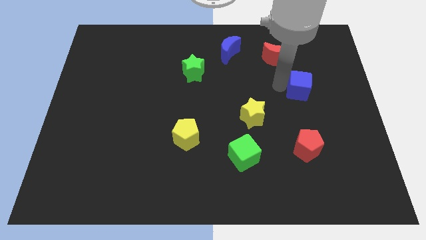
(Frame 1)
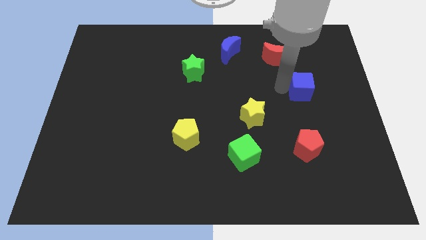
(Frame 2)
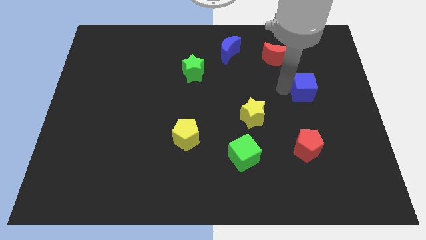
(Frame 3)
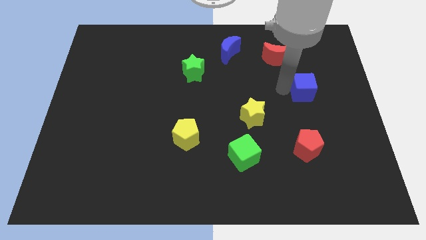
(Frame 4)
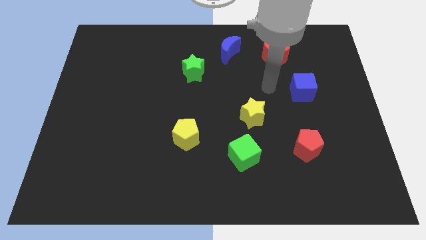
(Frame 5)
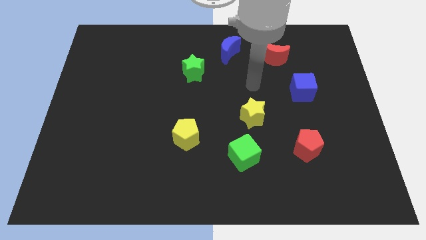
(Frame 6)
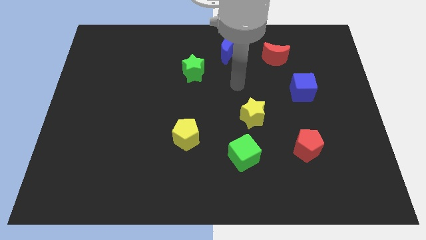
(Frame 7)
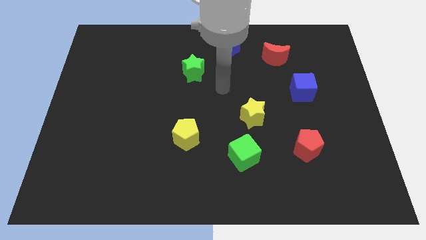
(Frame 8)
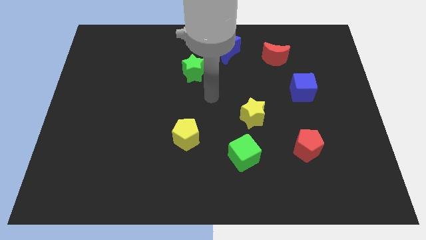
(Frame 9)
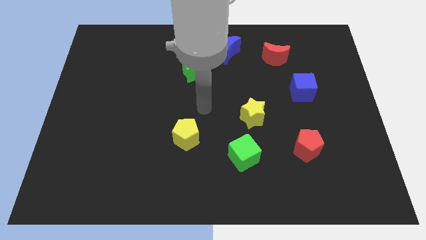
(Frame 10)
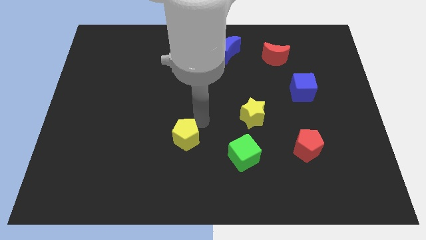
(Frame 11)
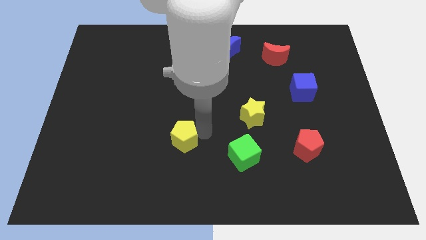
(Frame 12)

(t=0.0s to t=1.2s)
place your arm to the right of yellow pentagon

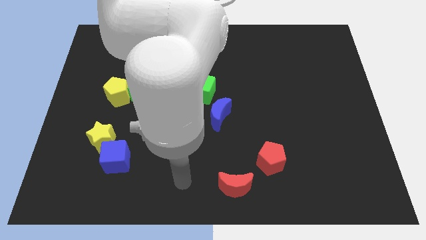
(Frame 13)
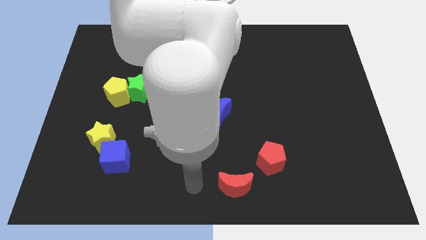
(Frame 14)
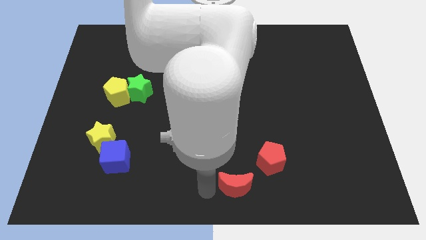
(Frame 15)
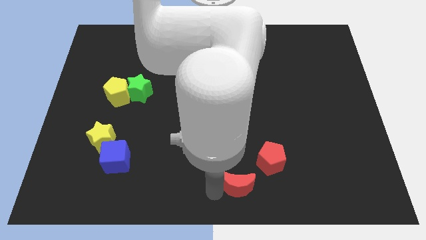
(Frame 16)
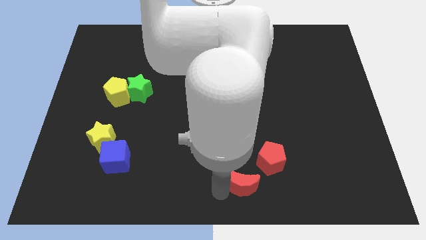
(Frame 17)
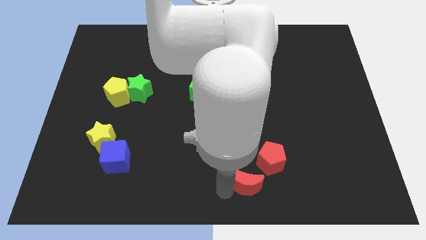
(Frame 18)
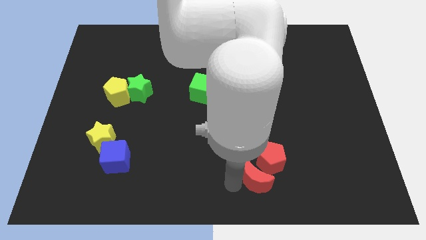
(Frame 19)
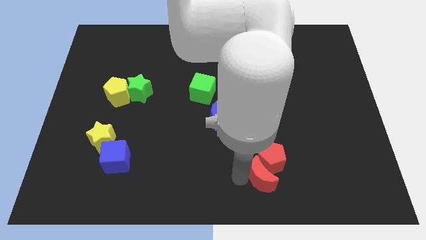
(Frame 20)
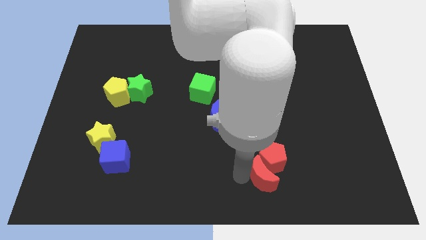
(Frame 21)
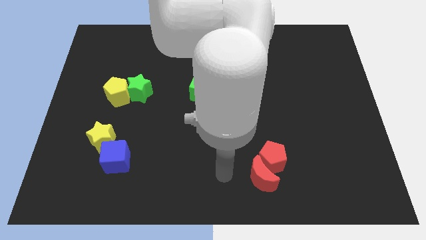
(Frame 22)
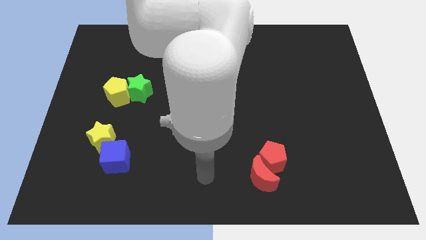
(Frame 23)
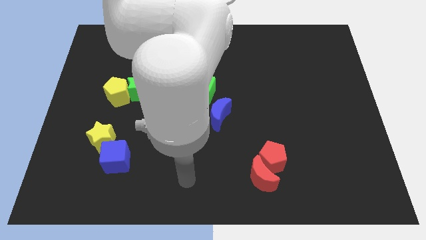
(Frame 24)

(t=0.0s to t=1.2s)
place the red crescent below the red pentagon

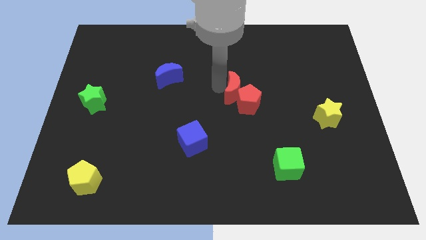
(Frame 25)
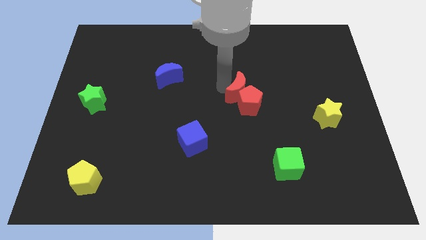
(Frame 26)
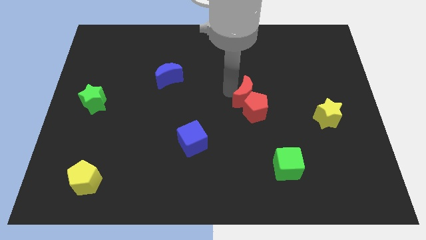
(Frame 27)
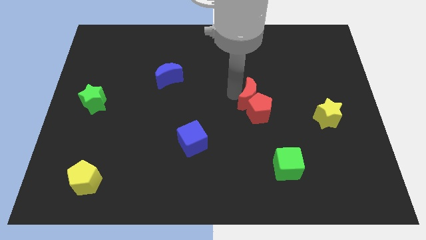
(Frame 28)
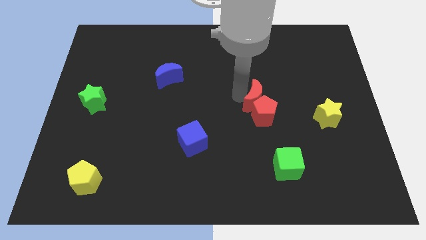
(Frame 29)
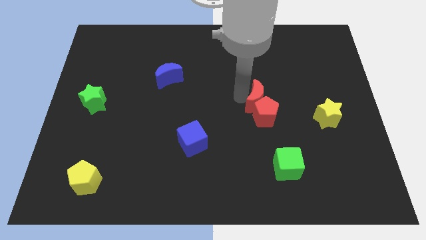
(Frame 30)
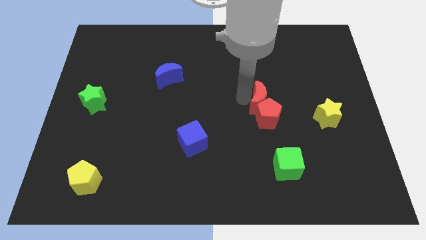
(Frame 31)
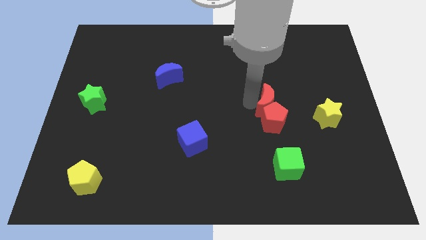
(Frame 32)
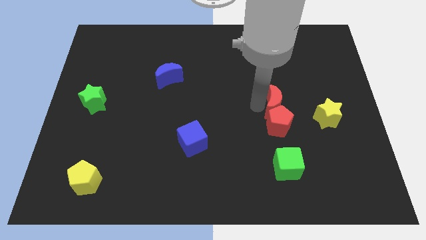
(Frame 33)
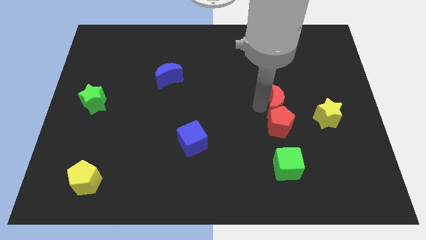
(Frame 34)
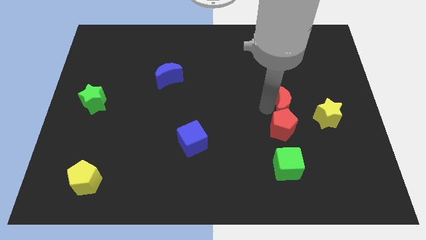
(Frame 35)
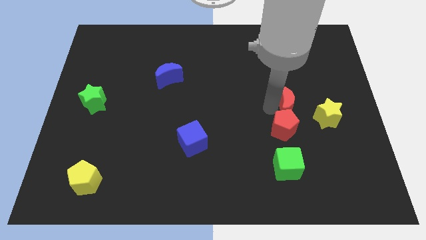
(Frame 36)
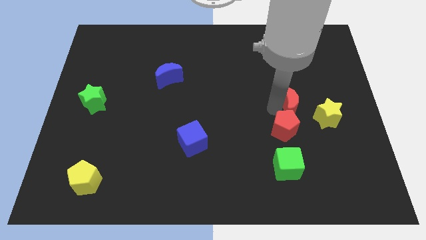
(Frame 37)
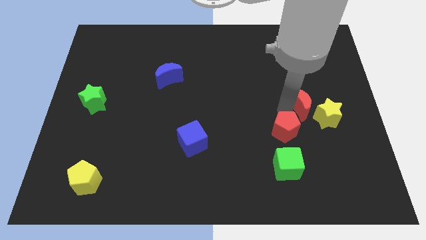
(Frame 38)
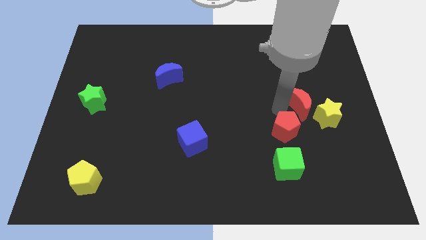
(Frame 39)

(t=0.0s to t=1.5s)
move the red crescent to the left of the yellow star on the board

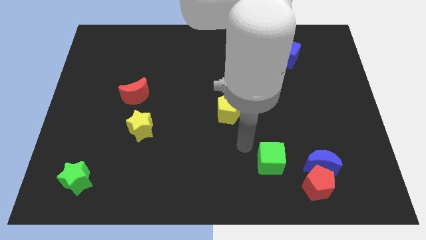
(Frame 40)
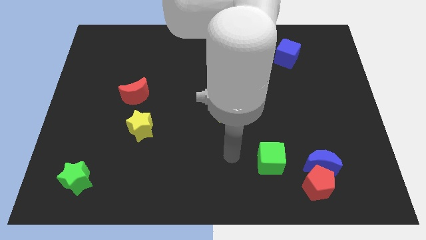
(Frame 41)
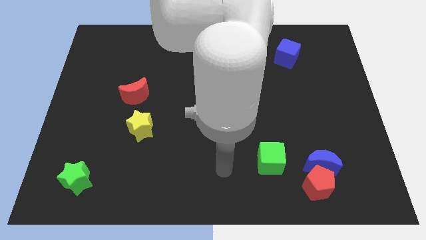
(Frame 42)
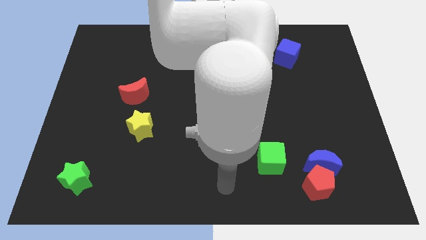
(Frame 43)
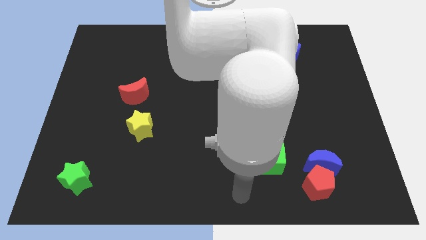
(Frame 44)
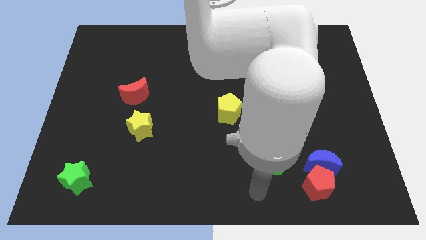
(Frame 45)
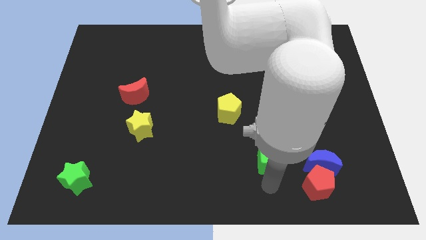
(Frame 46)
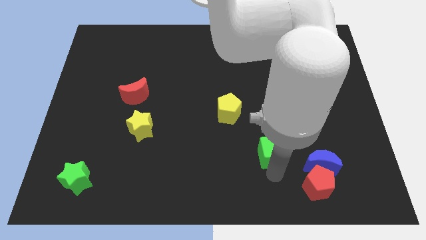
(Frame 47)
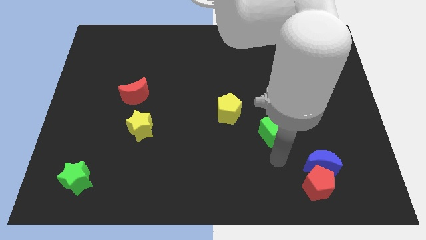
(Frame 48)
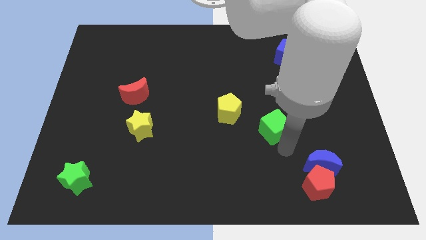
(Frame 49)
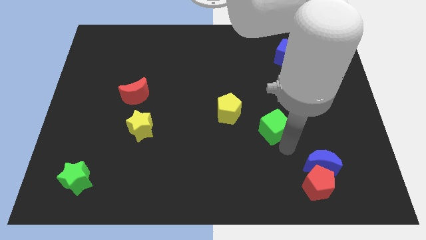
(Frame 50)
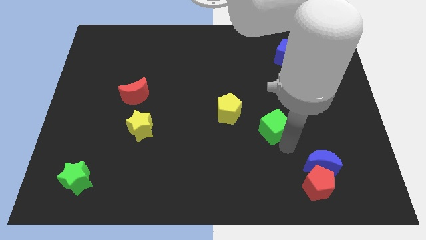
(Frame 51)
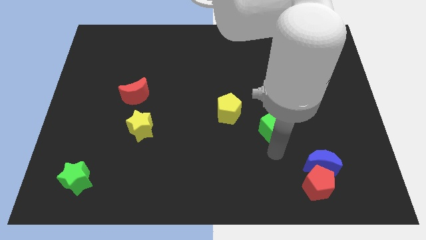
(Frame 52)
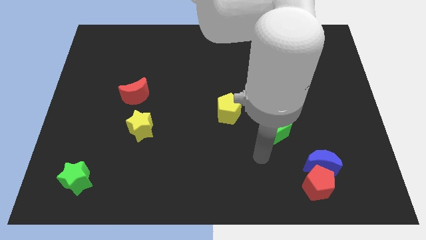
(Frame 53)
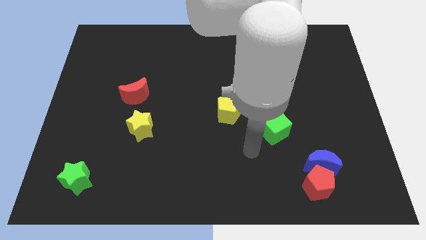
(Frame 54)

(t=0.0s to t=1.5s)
place the green cube in between the yellow pentagon and blue crescent

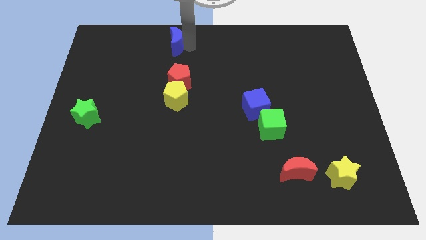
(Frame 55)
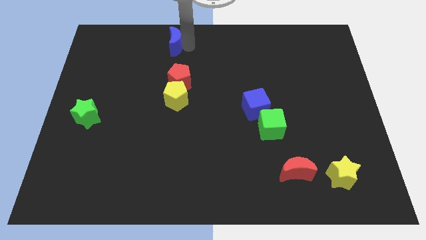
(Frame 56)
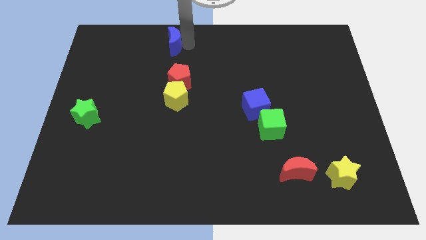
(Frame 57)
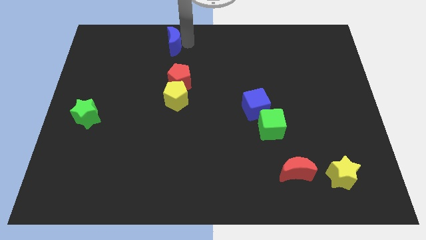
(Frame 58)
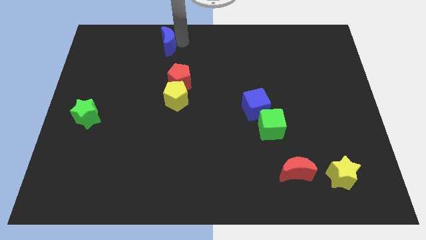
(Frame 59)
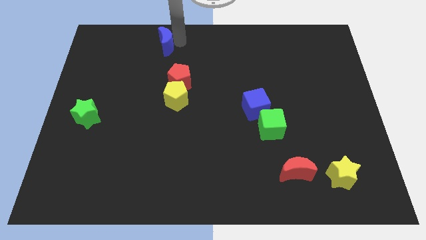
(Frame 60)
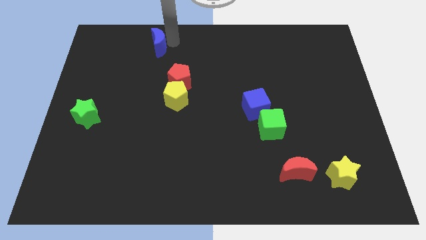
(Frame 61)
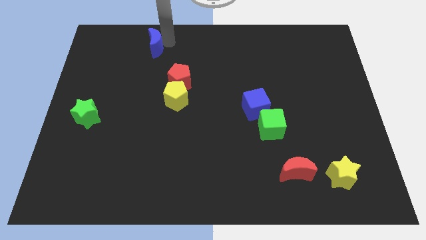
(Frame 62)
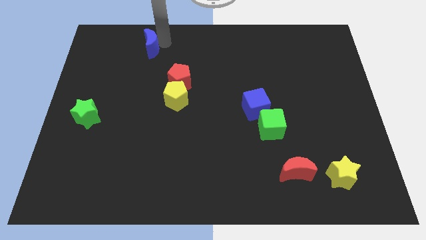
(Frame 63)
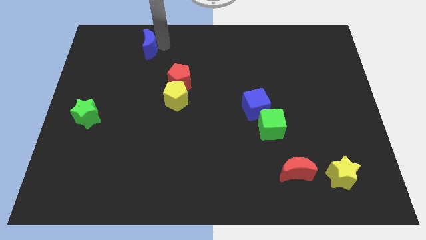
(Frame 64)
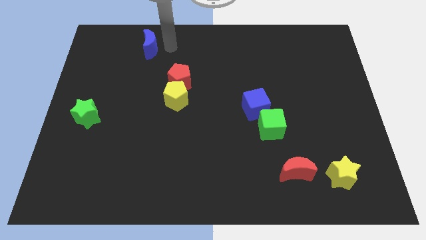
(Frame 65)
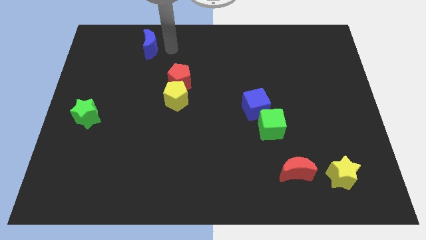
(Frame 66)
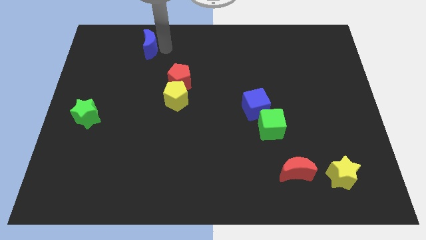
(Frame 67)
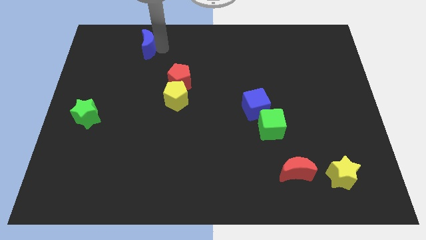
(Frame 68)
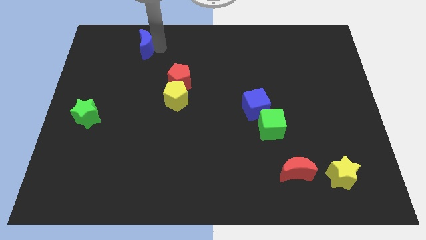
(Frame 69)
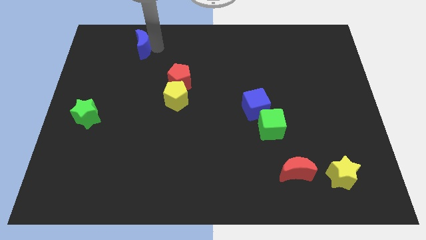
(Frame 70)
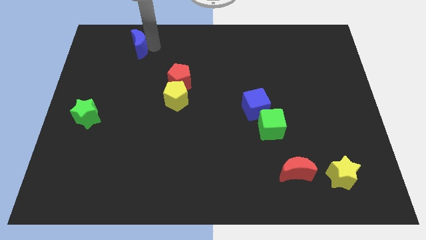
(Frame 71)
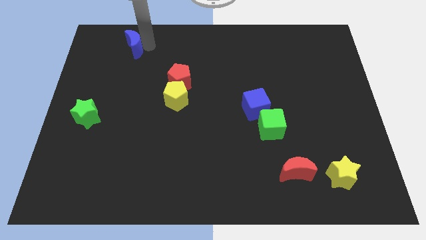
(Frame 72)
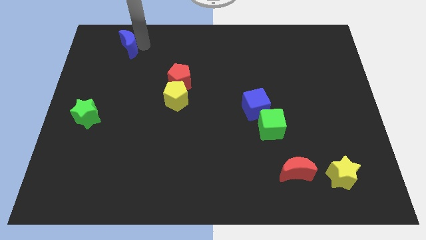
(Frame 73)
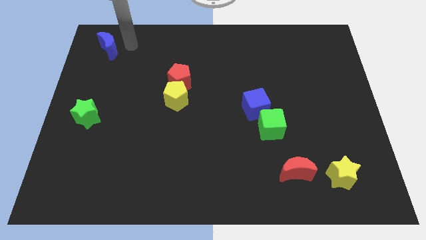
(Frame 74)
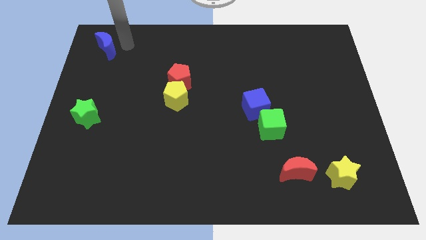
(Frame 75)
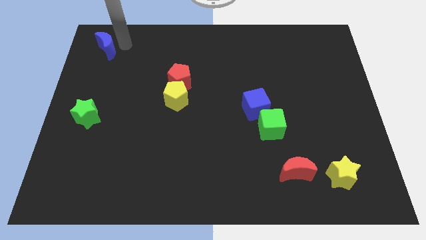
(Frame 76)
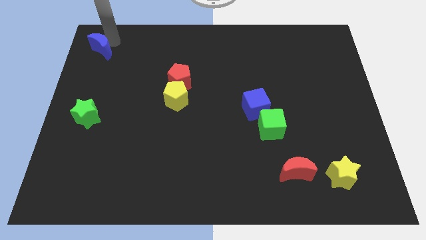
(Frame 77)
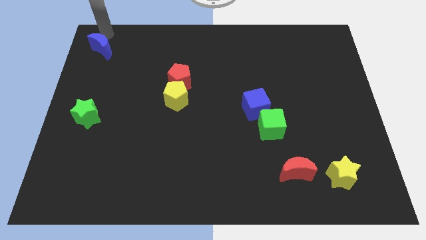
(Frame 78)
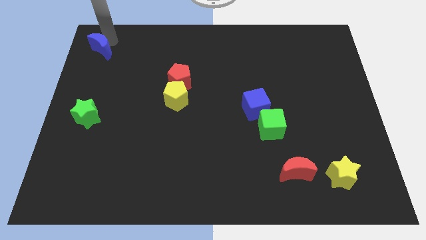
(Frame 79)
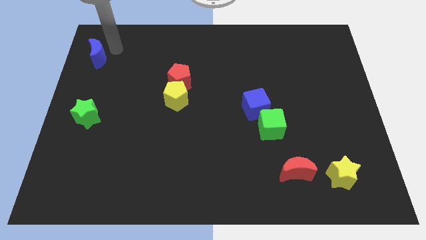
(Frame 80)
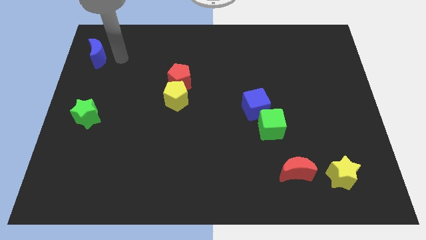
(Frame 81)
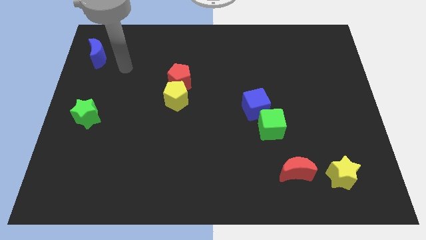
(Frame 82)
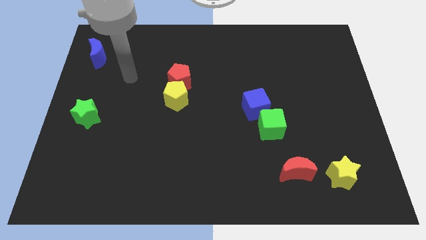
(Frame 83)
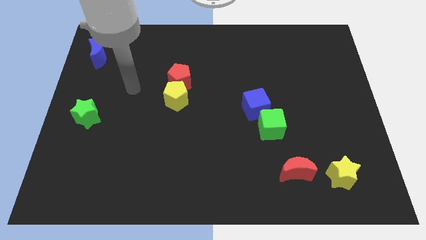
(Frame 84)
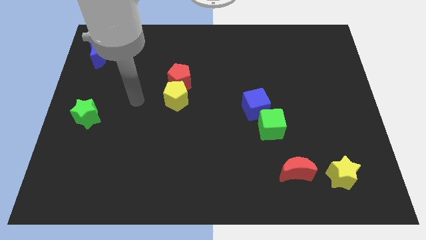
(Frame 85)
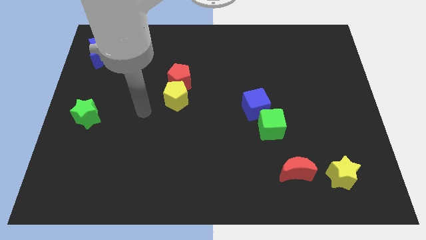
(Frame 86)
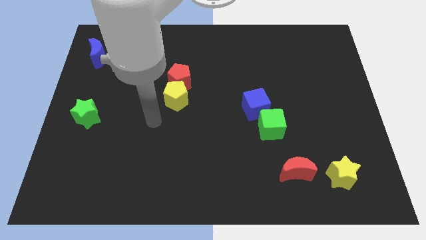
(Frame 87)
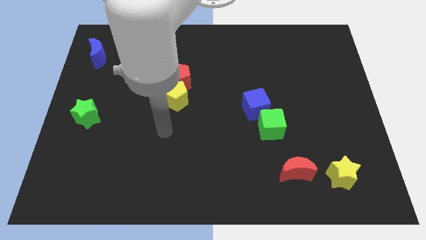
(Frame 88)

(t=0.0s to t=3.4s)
place the blue moon at the top left corner
